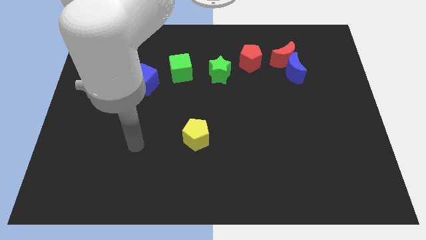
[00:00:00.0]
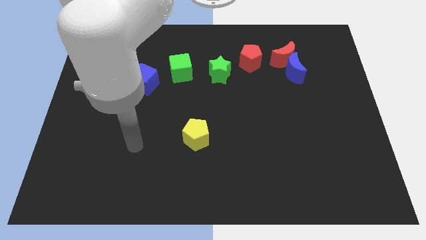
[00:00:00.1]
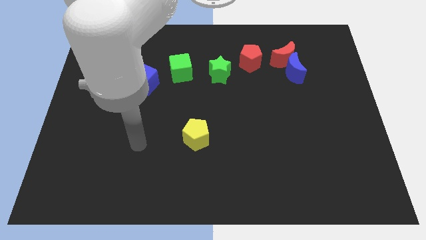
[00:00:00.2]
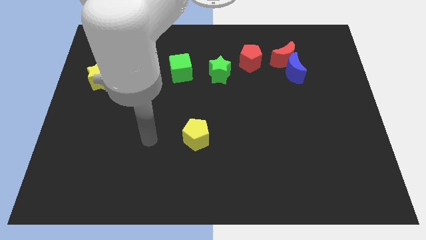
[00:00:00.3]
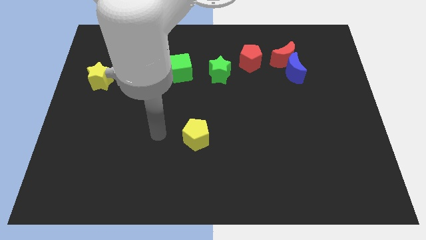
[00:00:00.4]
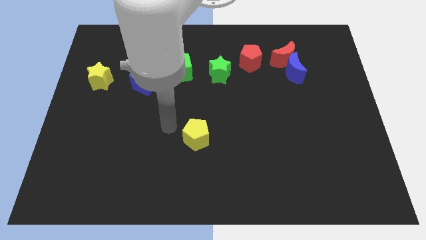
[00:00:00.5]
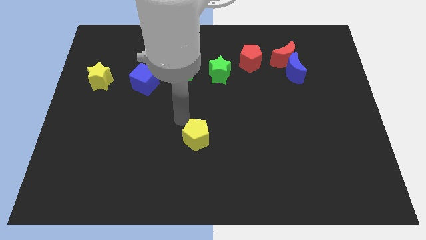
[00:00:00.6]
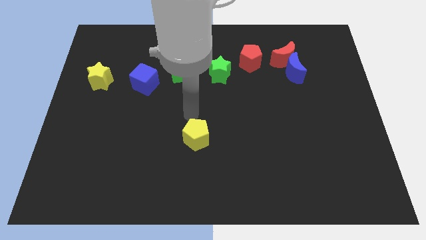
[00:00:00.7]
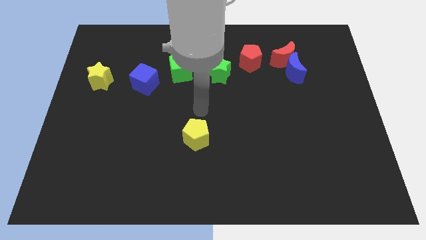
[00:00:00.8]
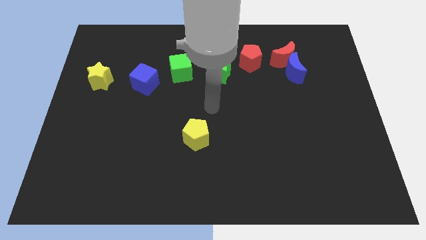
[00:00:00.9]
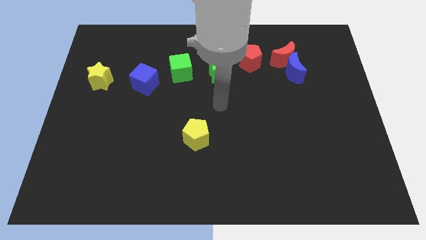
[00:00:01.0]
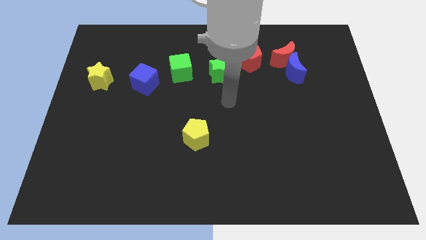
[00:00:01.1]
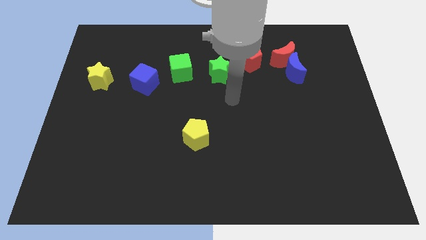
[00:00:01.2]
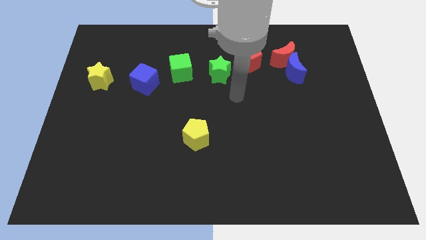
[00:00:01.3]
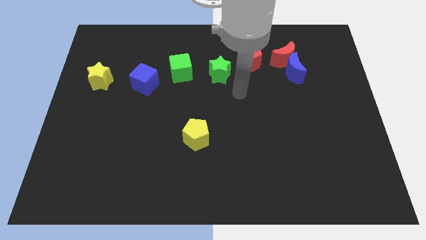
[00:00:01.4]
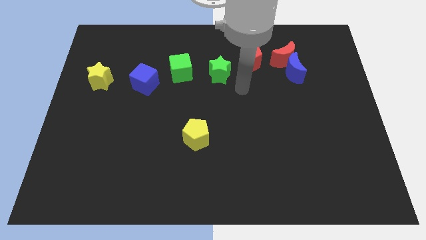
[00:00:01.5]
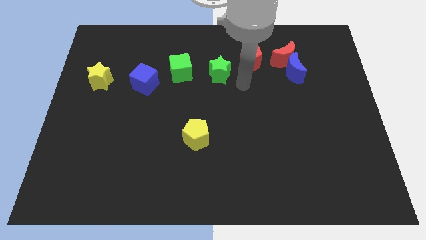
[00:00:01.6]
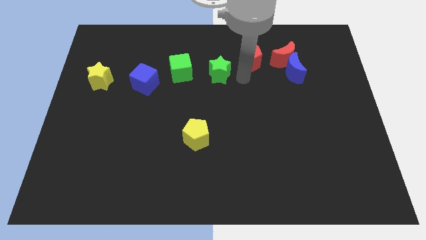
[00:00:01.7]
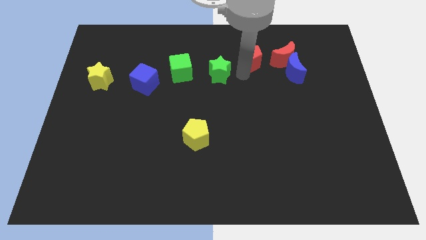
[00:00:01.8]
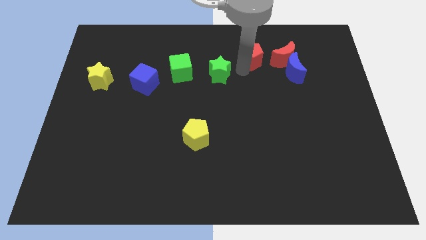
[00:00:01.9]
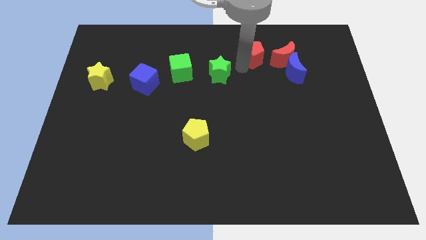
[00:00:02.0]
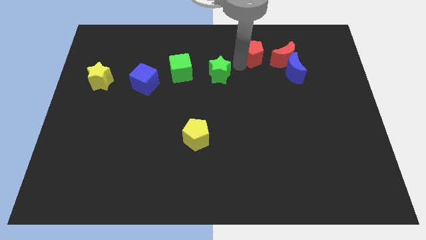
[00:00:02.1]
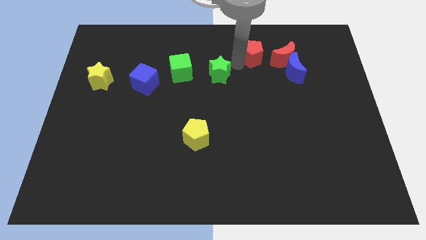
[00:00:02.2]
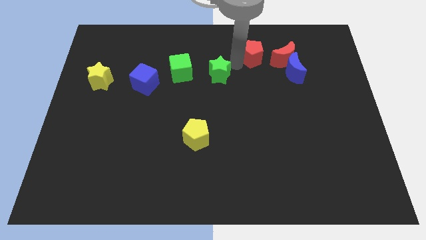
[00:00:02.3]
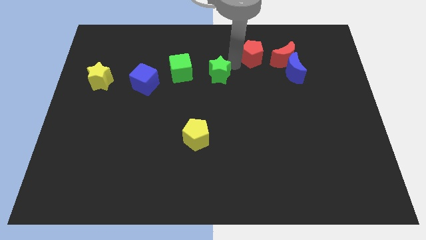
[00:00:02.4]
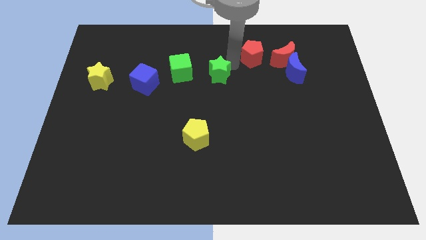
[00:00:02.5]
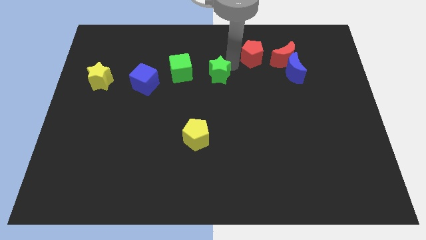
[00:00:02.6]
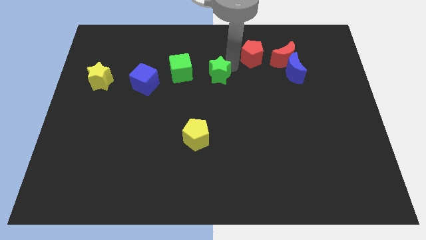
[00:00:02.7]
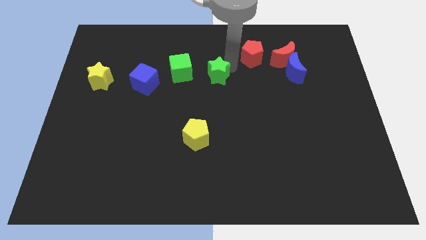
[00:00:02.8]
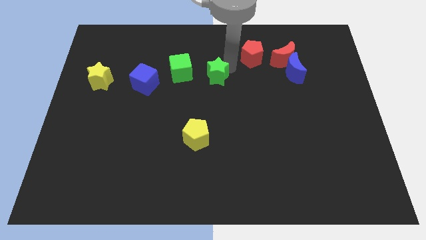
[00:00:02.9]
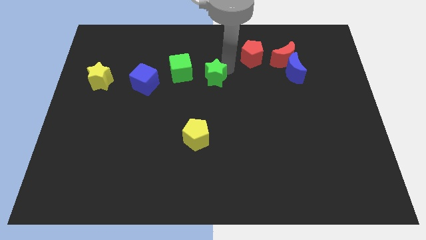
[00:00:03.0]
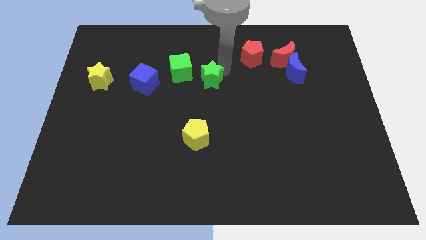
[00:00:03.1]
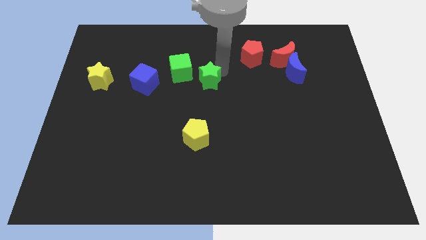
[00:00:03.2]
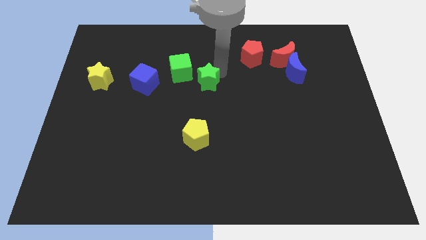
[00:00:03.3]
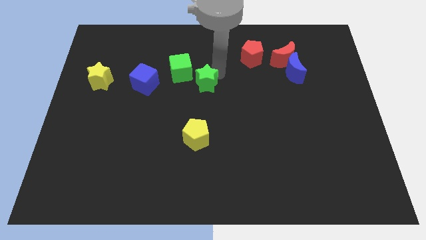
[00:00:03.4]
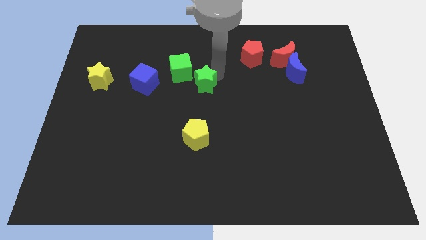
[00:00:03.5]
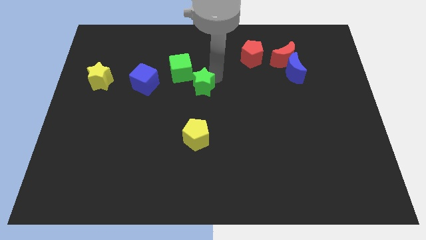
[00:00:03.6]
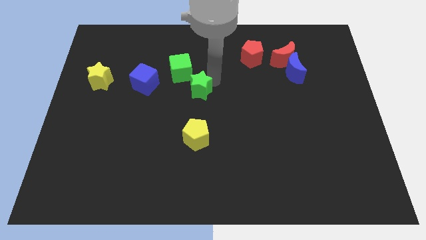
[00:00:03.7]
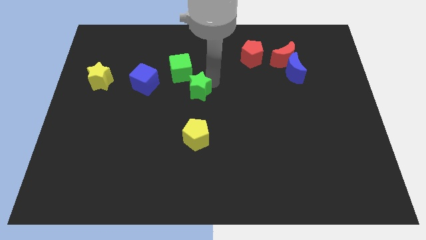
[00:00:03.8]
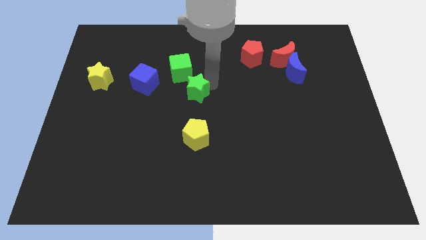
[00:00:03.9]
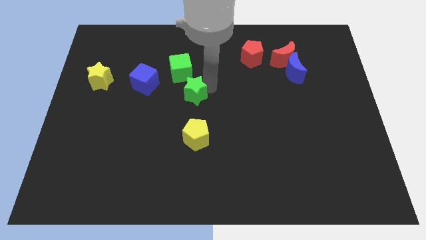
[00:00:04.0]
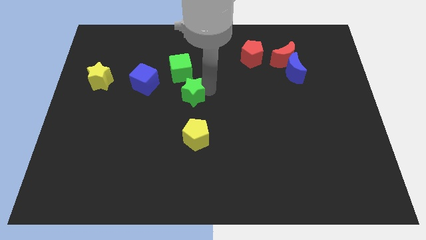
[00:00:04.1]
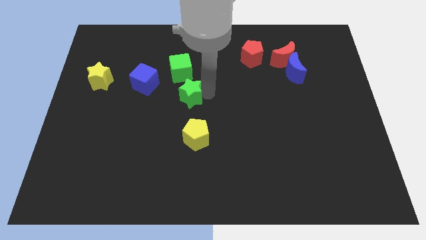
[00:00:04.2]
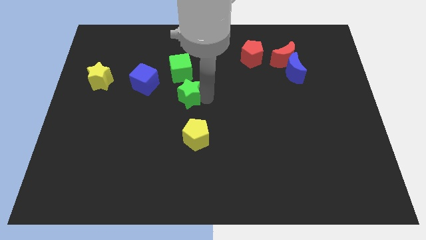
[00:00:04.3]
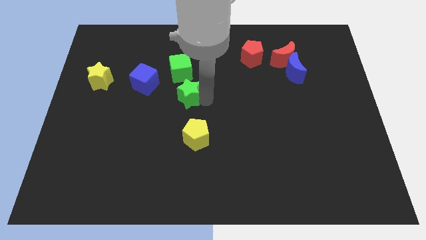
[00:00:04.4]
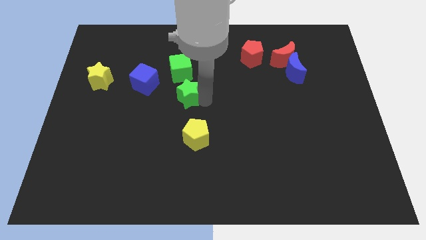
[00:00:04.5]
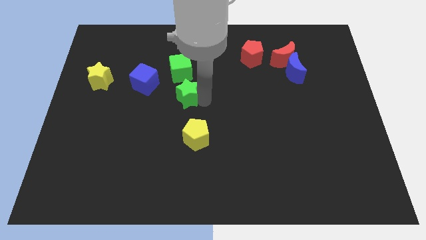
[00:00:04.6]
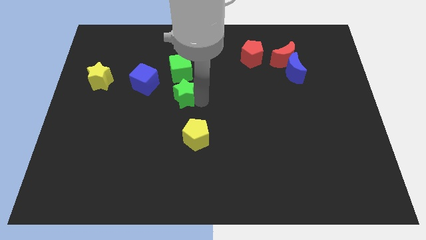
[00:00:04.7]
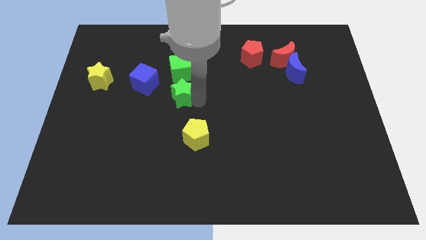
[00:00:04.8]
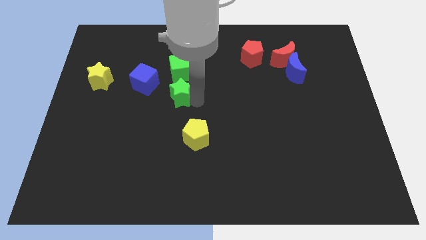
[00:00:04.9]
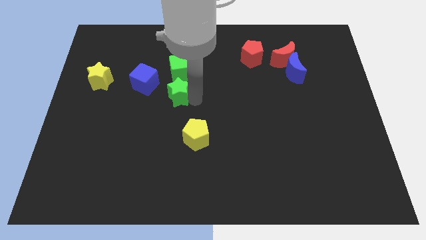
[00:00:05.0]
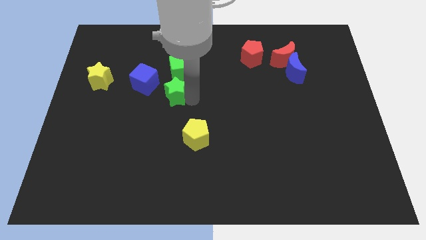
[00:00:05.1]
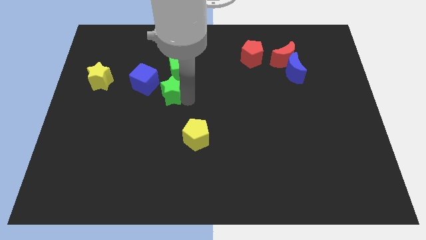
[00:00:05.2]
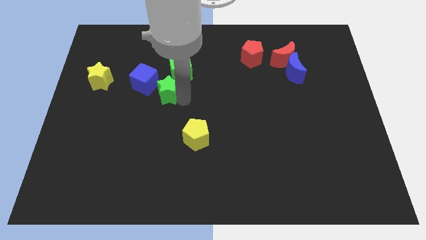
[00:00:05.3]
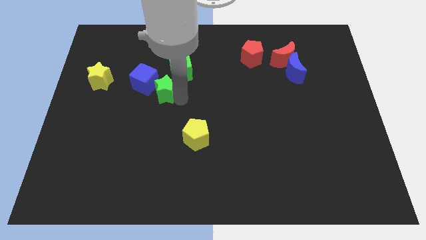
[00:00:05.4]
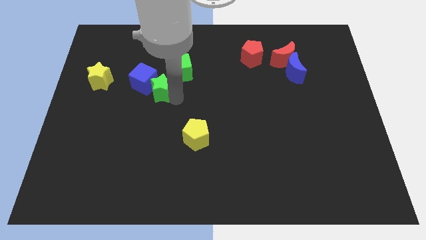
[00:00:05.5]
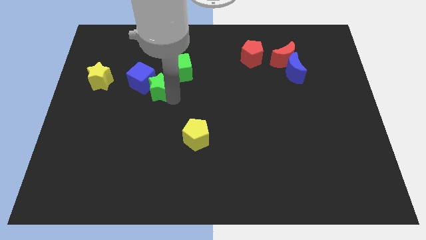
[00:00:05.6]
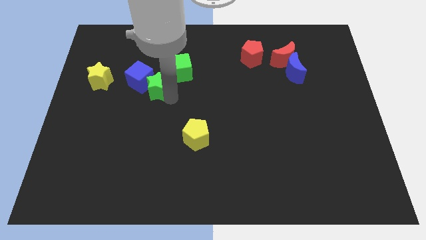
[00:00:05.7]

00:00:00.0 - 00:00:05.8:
slide the green star close to the blue cube

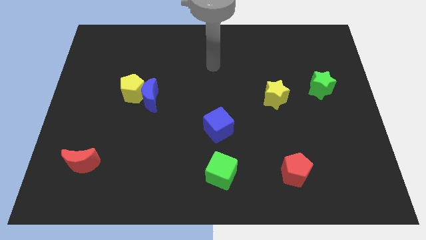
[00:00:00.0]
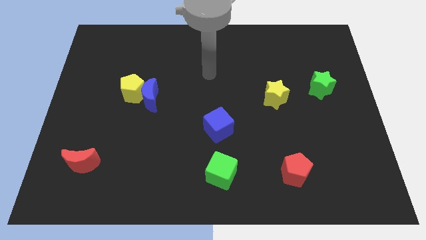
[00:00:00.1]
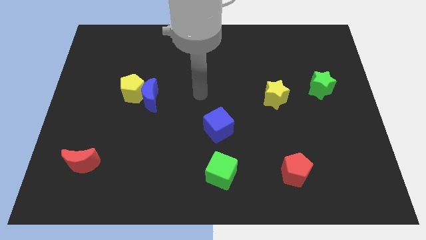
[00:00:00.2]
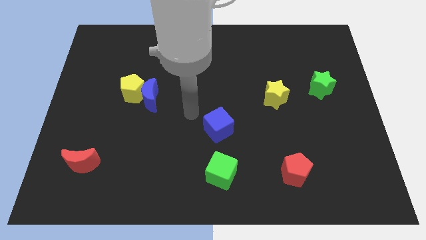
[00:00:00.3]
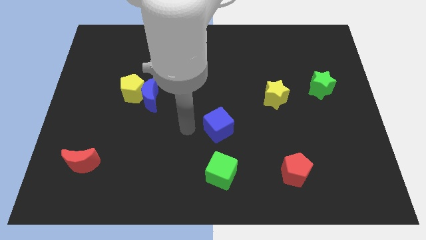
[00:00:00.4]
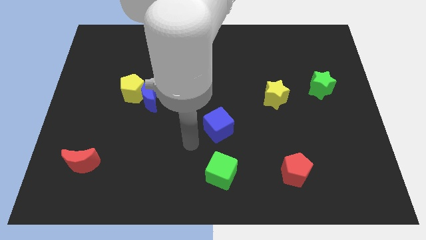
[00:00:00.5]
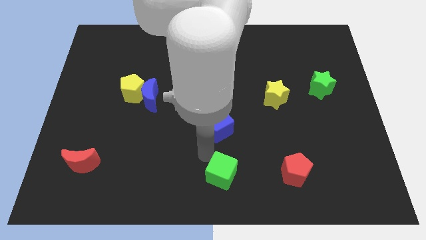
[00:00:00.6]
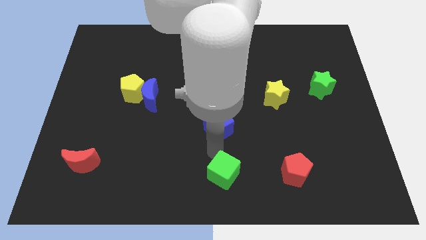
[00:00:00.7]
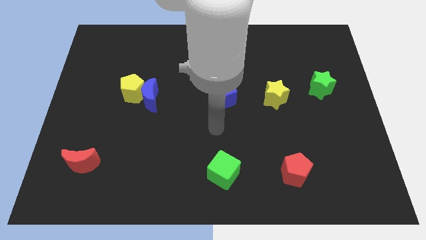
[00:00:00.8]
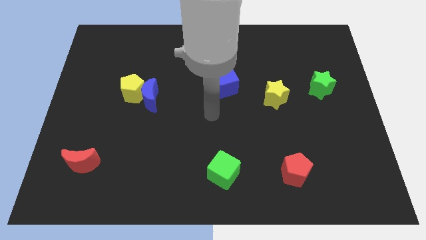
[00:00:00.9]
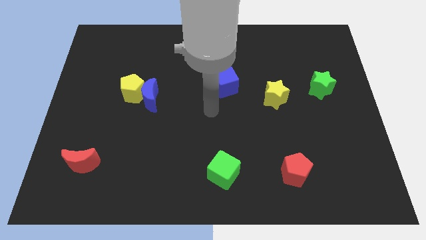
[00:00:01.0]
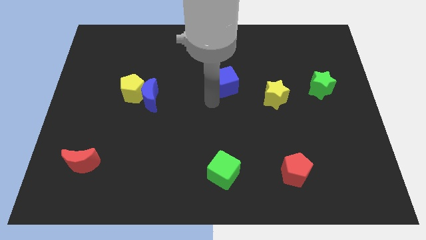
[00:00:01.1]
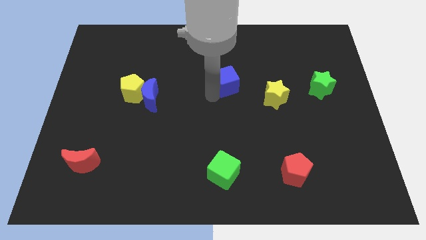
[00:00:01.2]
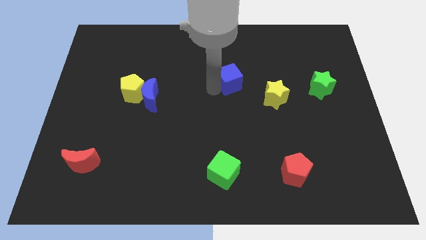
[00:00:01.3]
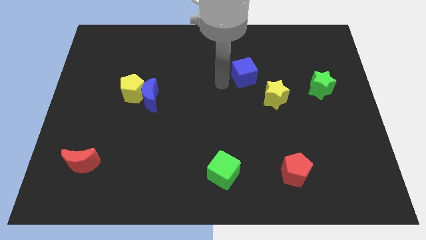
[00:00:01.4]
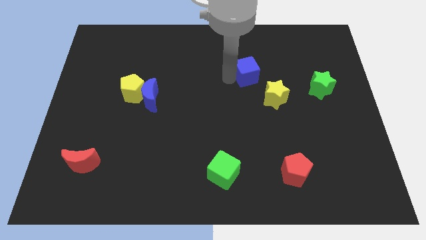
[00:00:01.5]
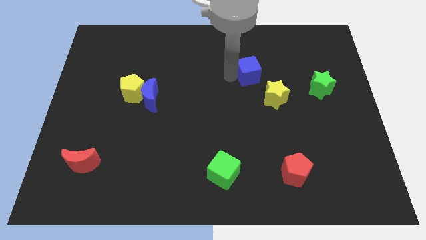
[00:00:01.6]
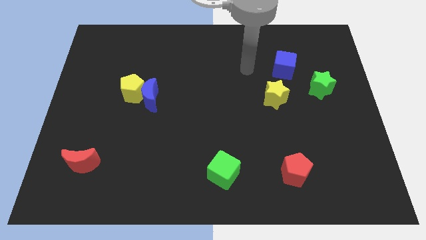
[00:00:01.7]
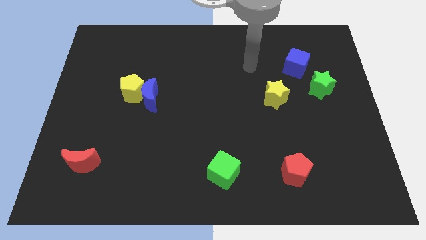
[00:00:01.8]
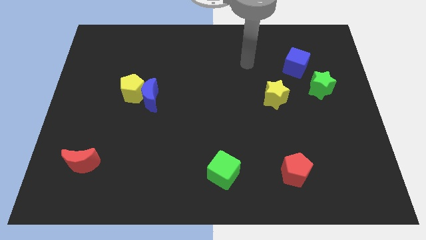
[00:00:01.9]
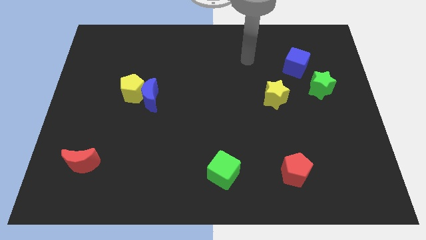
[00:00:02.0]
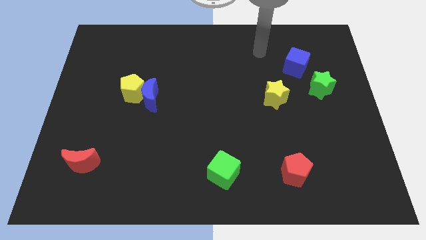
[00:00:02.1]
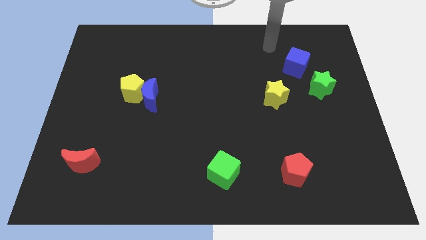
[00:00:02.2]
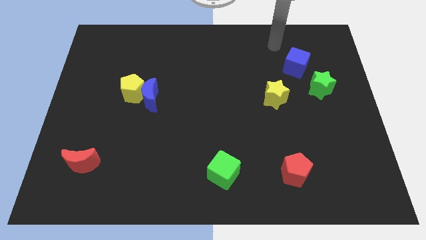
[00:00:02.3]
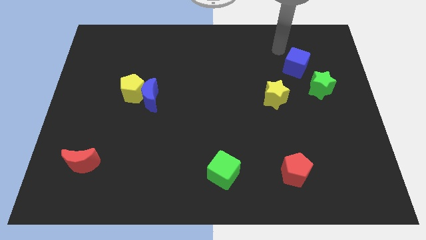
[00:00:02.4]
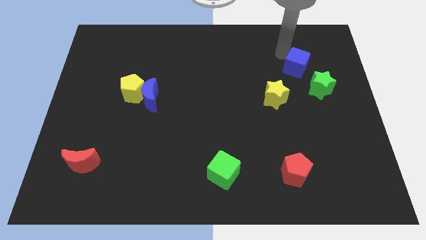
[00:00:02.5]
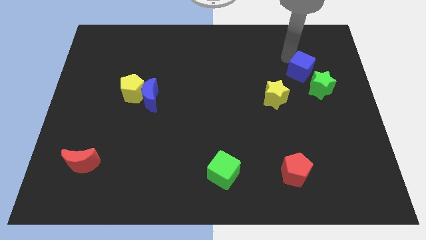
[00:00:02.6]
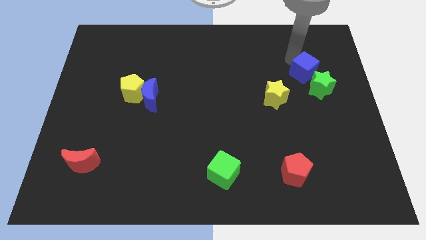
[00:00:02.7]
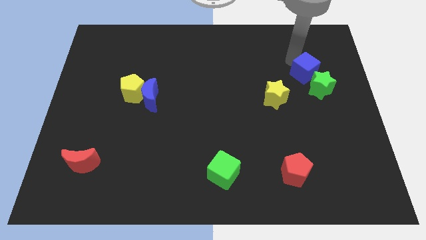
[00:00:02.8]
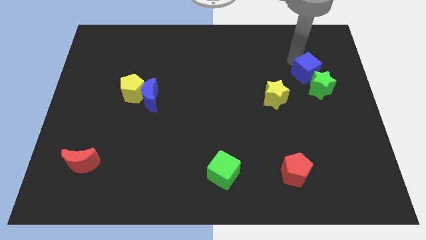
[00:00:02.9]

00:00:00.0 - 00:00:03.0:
push the blue cube towards the green star
